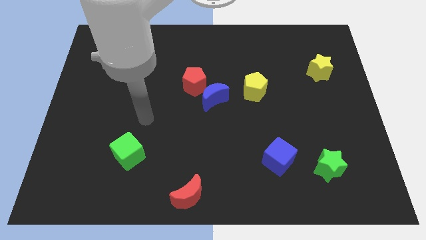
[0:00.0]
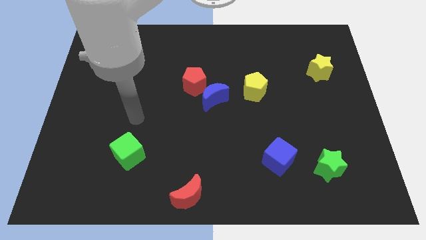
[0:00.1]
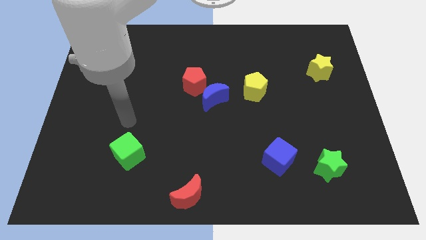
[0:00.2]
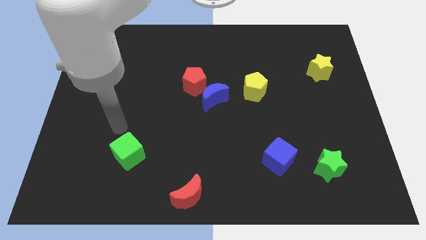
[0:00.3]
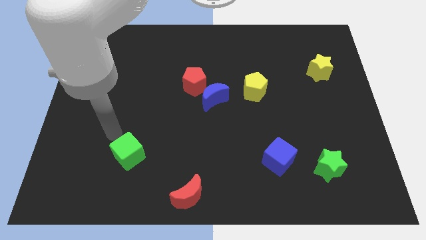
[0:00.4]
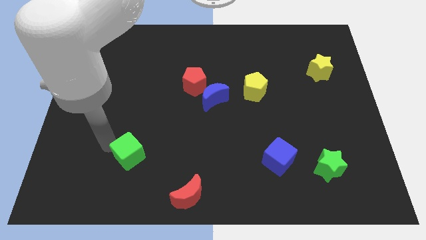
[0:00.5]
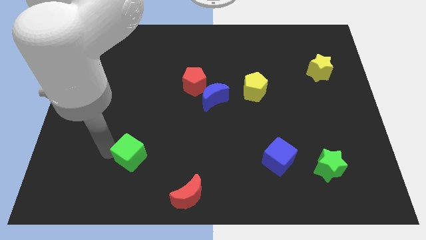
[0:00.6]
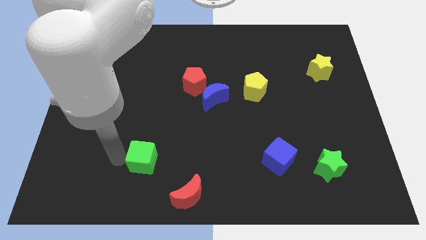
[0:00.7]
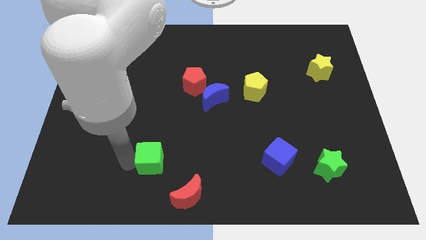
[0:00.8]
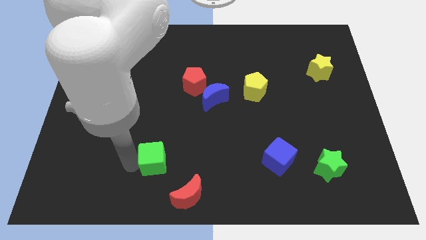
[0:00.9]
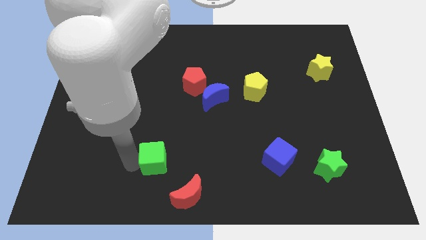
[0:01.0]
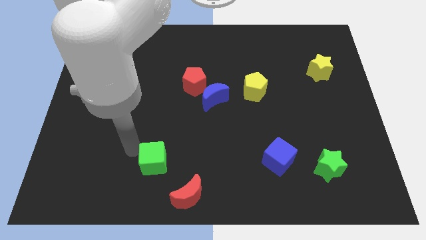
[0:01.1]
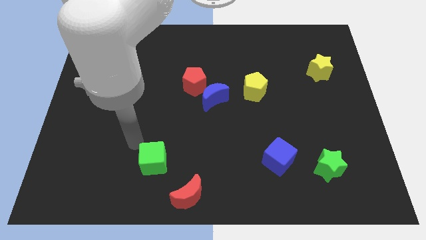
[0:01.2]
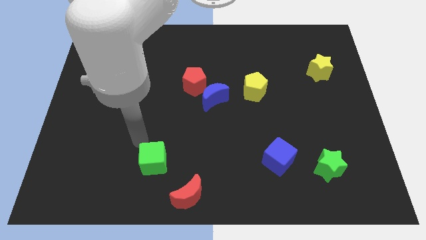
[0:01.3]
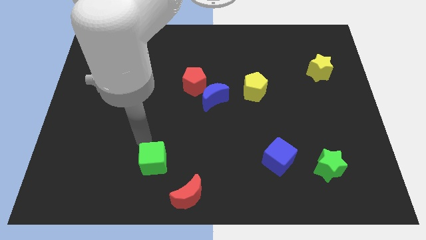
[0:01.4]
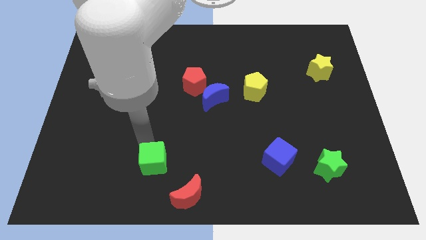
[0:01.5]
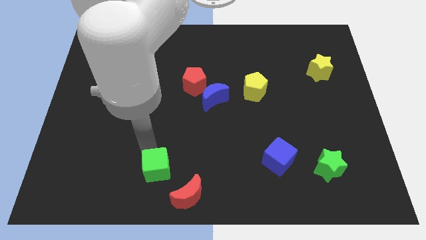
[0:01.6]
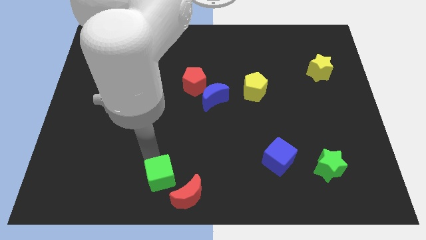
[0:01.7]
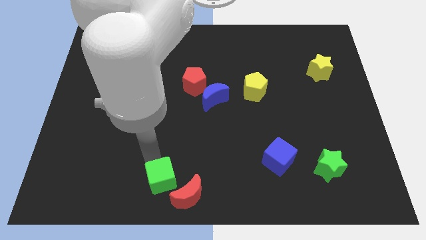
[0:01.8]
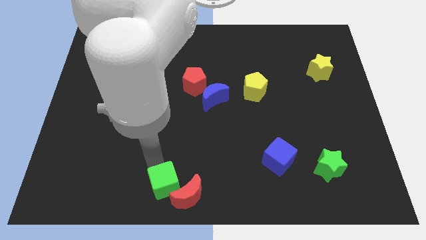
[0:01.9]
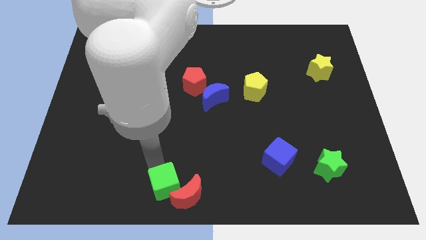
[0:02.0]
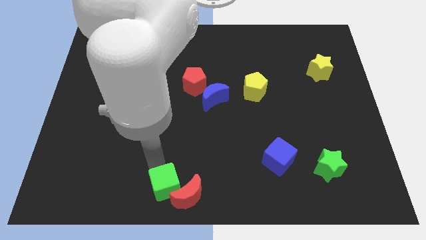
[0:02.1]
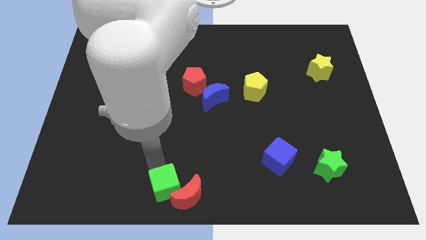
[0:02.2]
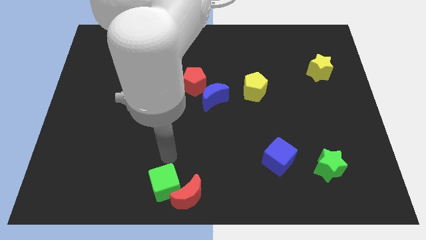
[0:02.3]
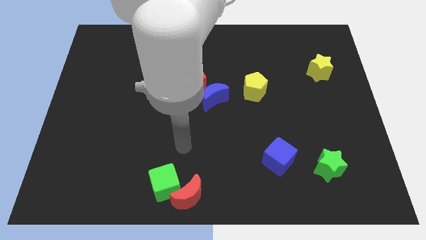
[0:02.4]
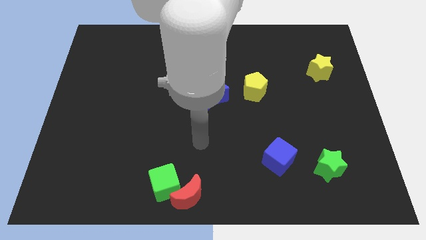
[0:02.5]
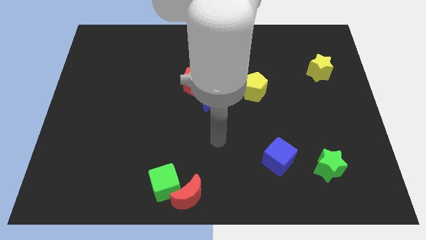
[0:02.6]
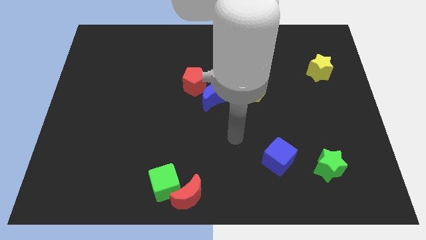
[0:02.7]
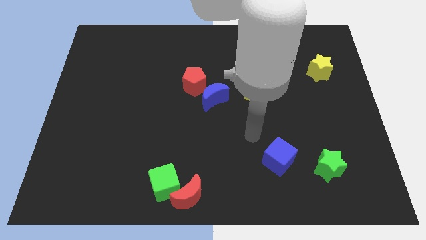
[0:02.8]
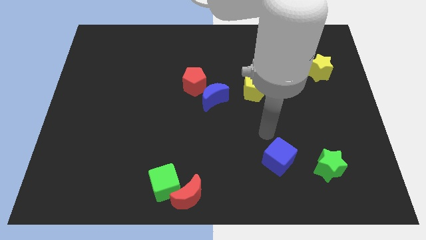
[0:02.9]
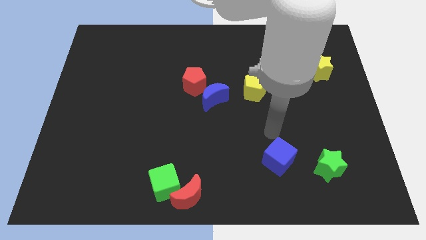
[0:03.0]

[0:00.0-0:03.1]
push the green cube towards the bottom center

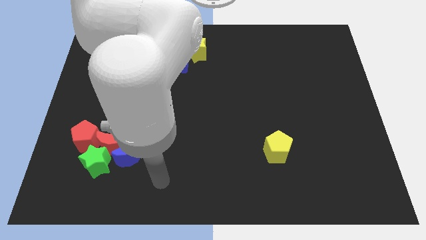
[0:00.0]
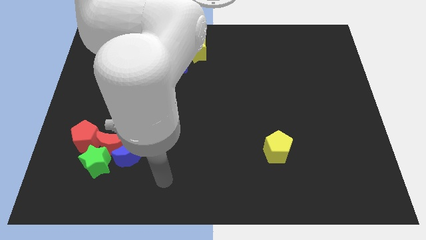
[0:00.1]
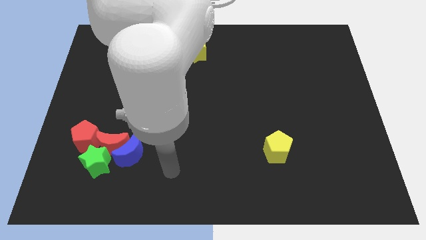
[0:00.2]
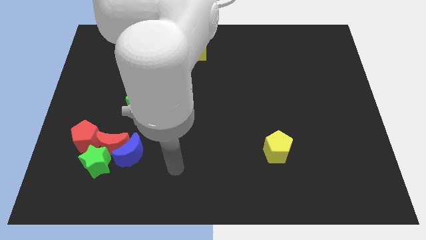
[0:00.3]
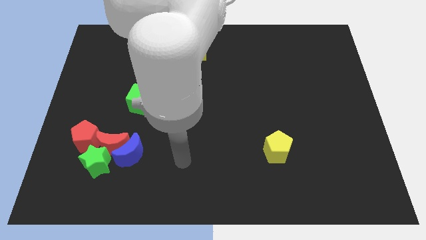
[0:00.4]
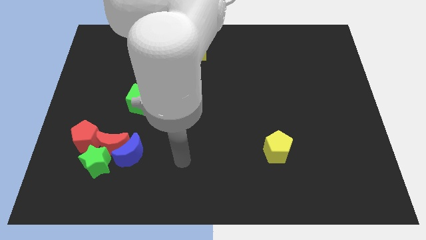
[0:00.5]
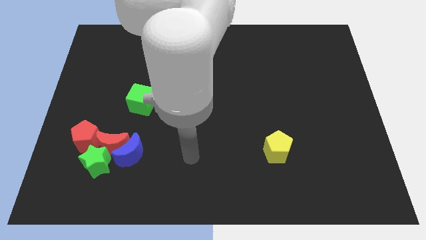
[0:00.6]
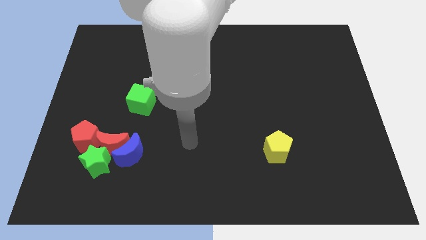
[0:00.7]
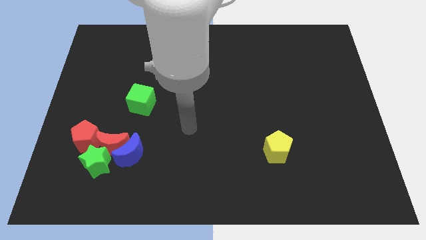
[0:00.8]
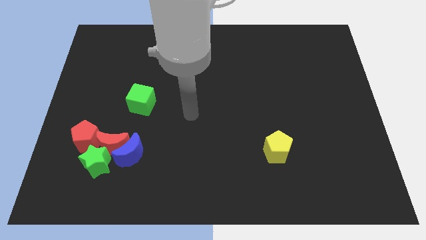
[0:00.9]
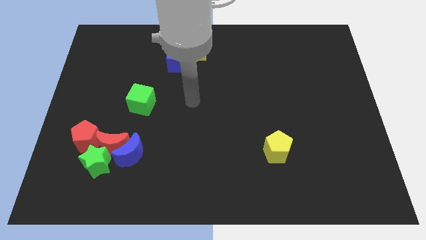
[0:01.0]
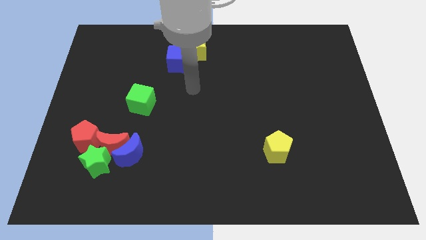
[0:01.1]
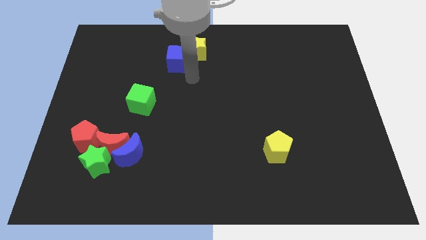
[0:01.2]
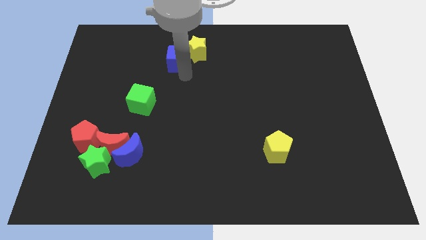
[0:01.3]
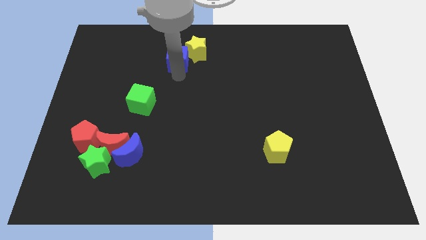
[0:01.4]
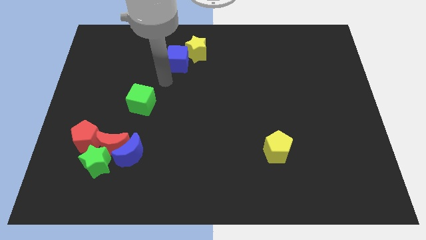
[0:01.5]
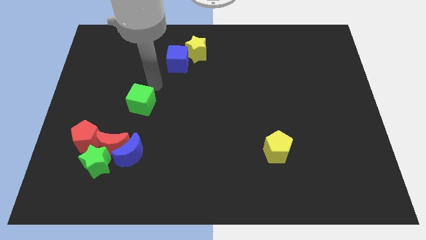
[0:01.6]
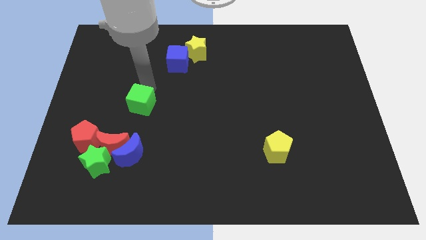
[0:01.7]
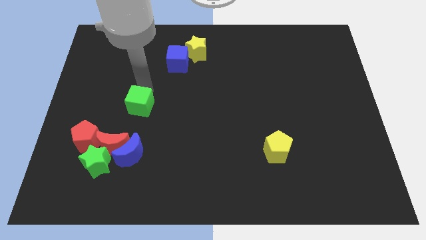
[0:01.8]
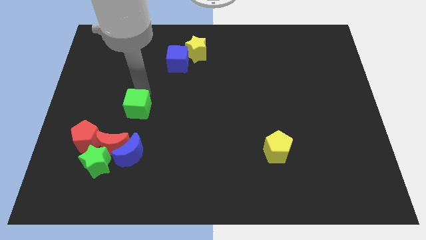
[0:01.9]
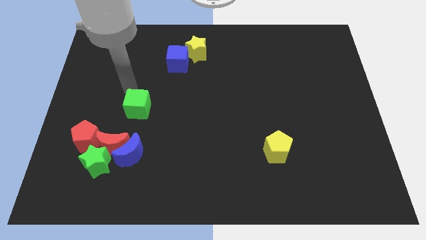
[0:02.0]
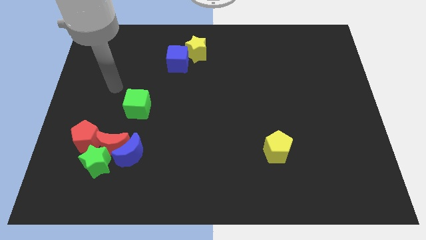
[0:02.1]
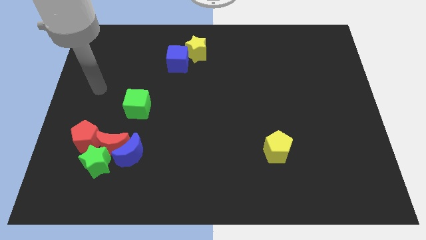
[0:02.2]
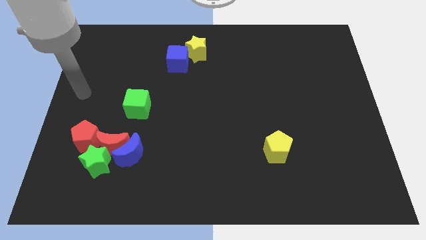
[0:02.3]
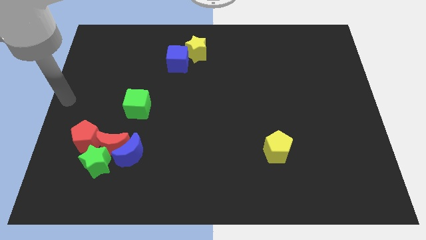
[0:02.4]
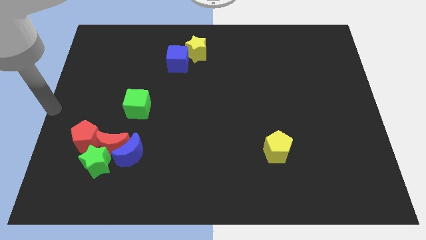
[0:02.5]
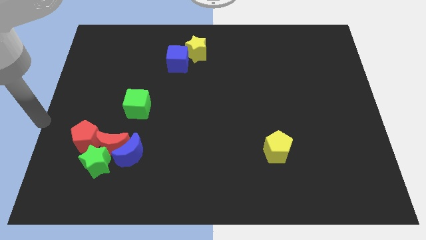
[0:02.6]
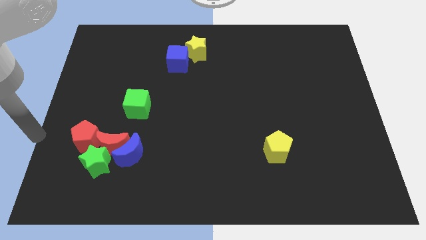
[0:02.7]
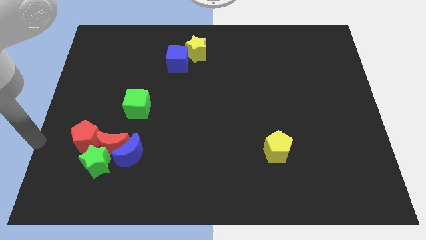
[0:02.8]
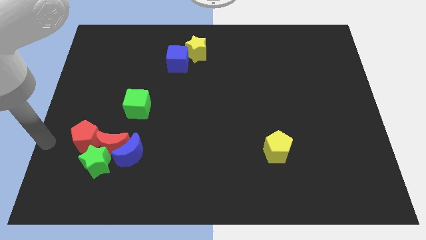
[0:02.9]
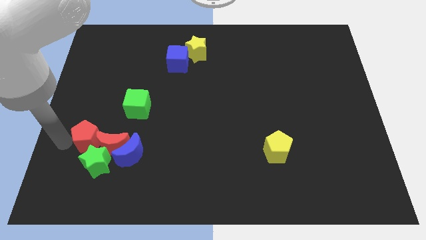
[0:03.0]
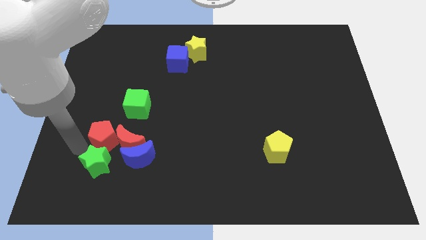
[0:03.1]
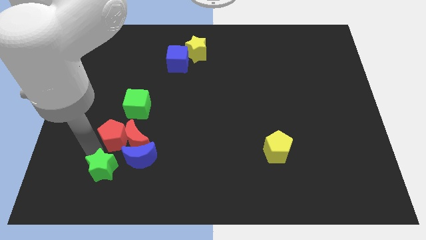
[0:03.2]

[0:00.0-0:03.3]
push the group of objects to the right side of the board

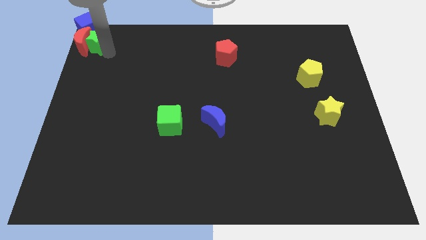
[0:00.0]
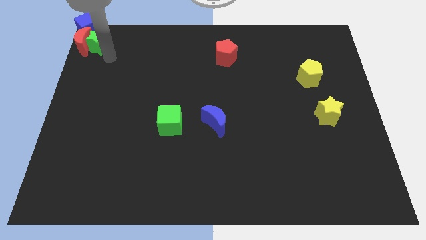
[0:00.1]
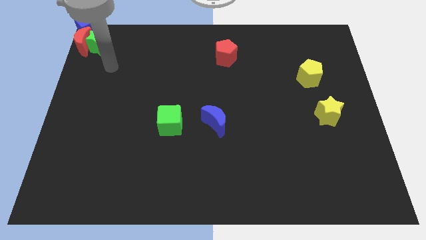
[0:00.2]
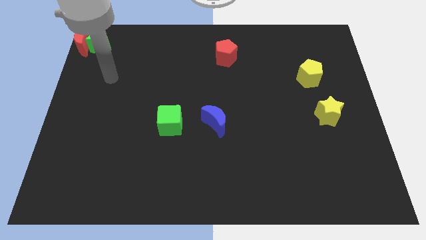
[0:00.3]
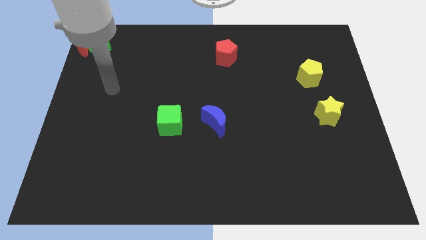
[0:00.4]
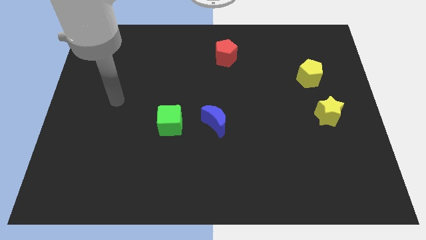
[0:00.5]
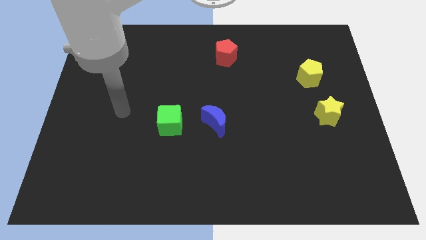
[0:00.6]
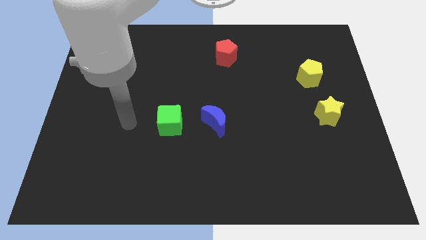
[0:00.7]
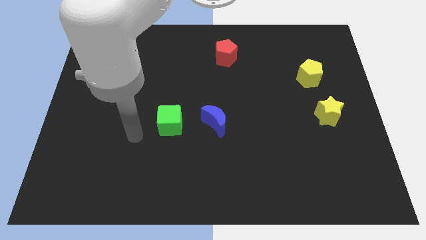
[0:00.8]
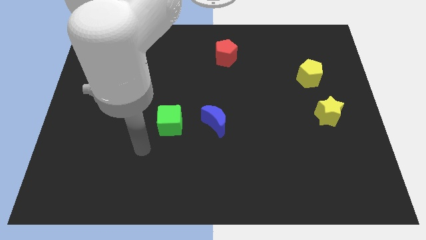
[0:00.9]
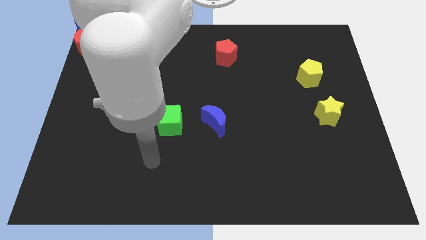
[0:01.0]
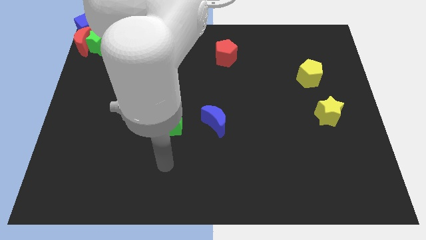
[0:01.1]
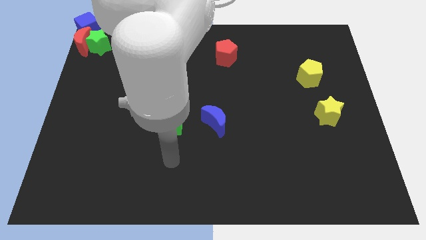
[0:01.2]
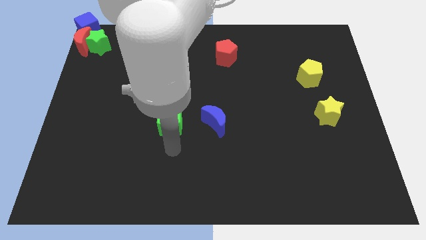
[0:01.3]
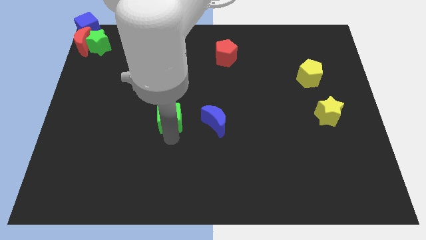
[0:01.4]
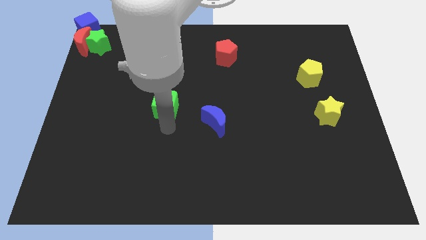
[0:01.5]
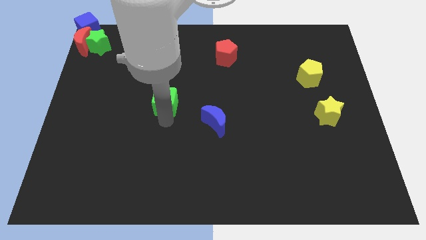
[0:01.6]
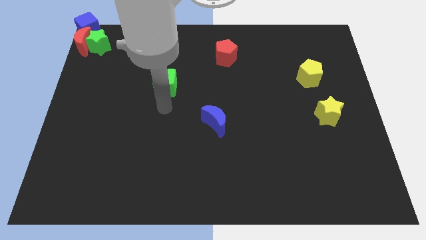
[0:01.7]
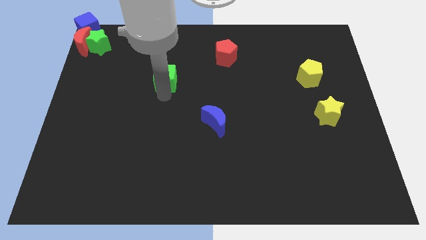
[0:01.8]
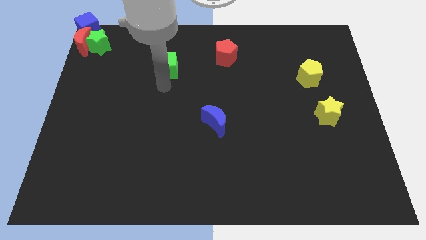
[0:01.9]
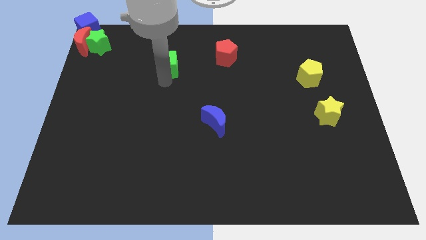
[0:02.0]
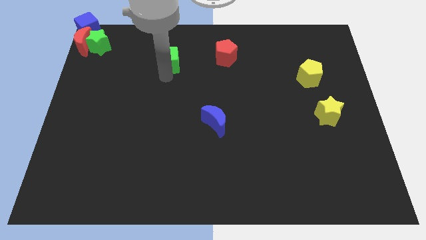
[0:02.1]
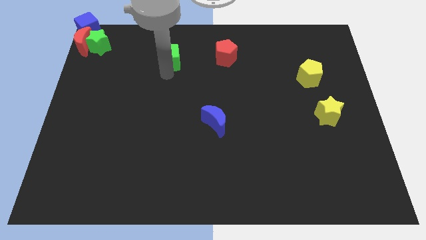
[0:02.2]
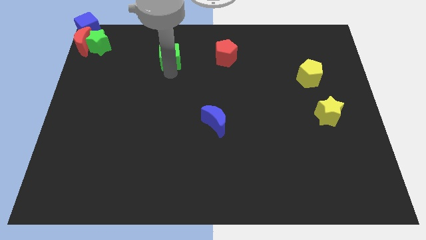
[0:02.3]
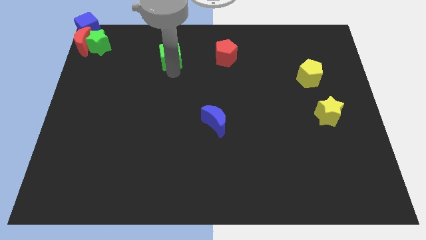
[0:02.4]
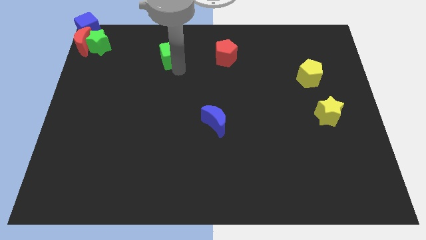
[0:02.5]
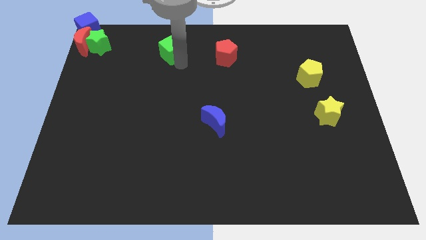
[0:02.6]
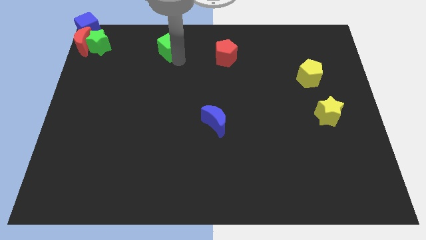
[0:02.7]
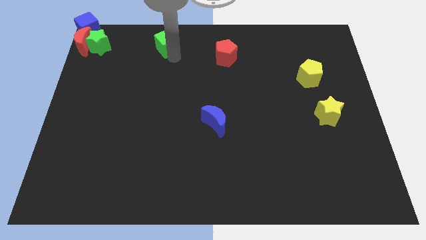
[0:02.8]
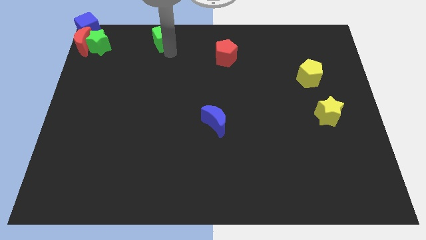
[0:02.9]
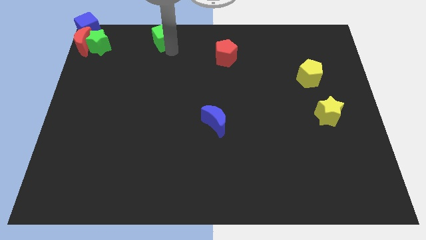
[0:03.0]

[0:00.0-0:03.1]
slide the green cube to the top side of the table
